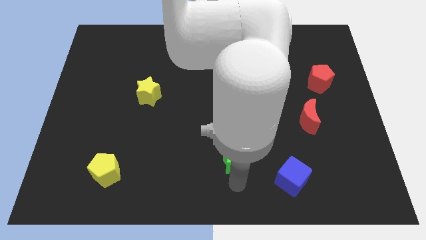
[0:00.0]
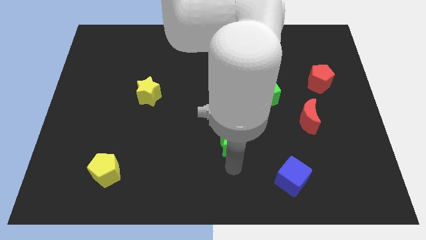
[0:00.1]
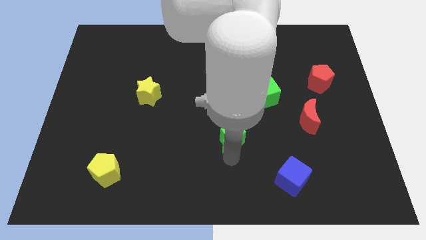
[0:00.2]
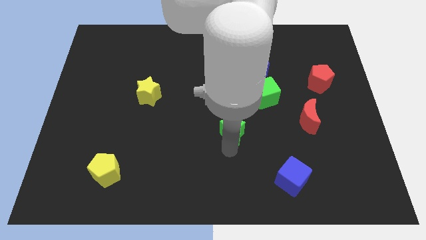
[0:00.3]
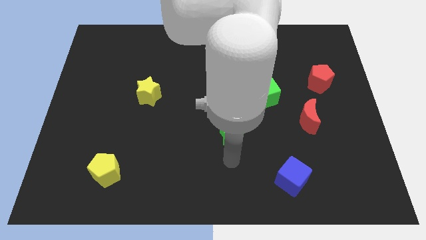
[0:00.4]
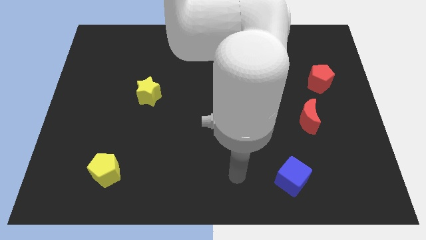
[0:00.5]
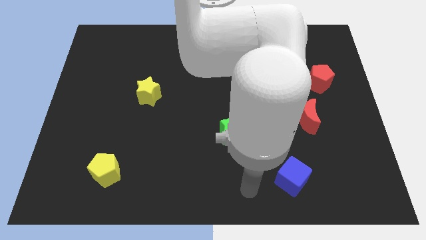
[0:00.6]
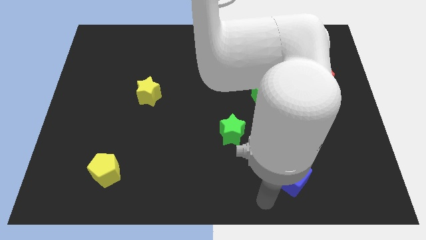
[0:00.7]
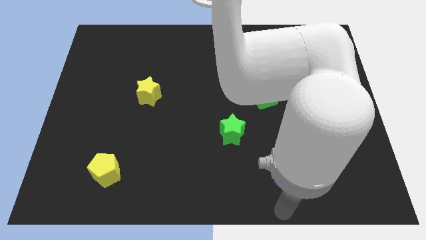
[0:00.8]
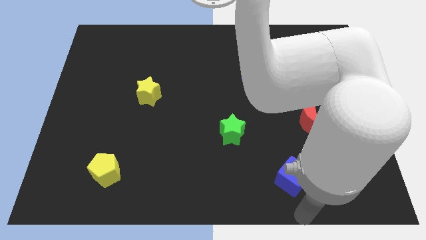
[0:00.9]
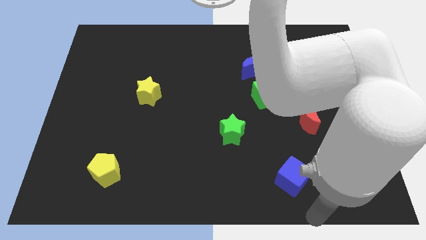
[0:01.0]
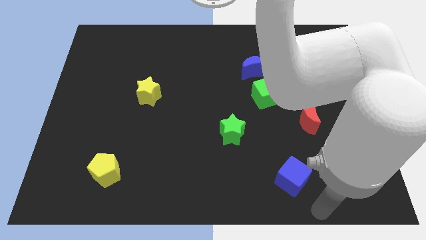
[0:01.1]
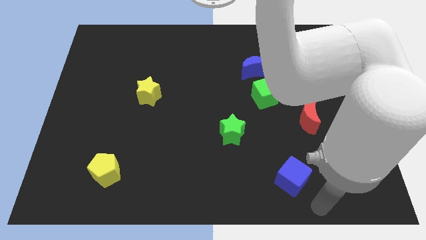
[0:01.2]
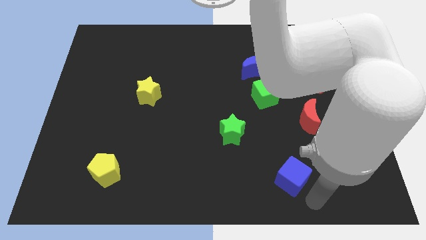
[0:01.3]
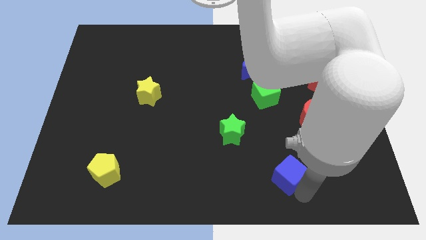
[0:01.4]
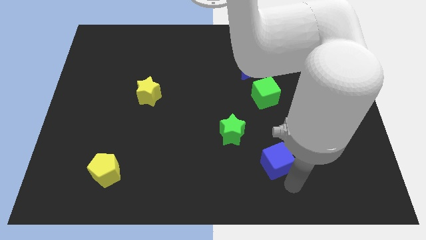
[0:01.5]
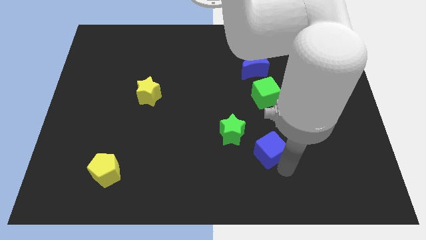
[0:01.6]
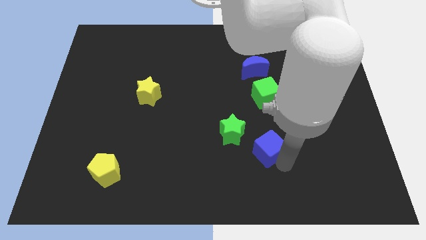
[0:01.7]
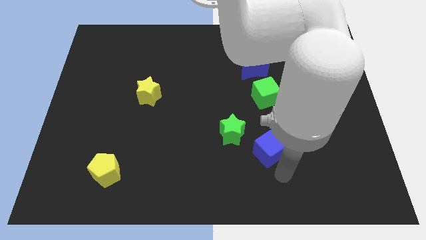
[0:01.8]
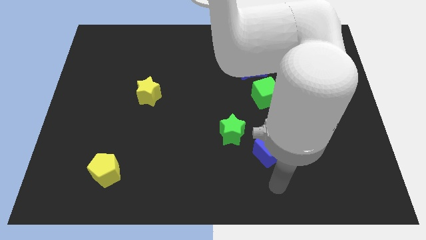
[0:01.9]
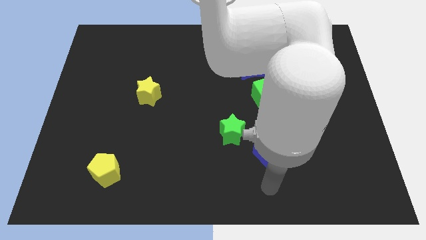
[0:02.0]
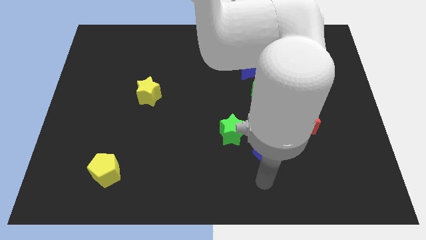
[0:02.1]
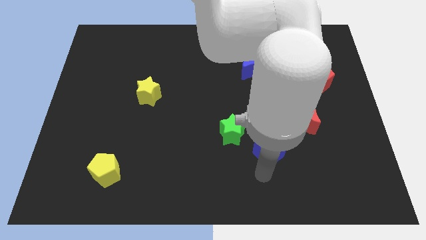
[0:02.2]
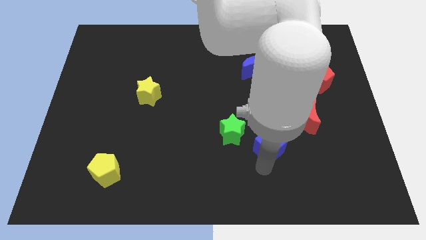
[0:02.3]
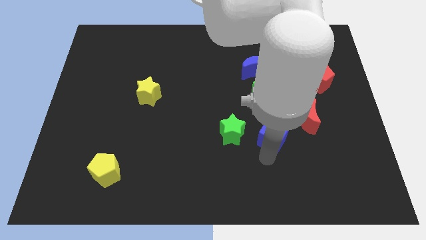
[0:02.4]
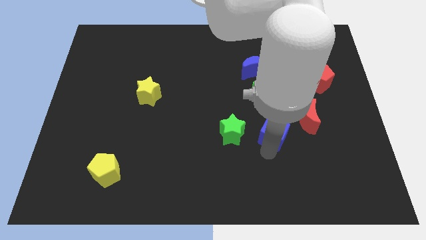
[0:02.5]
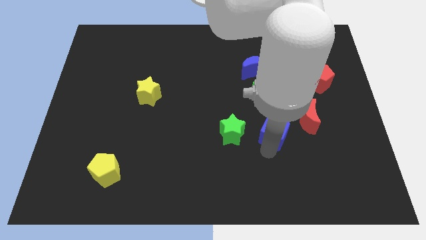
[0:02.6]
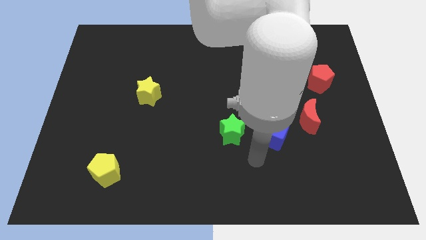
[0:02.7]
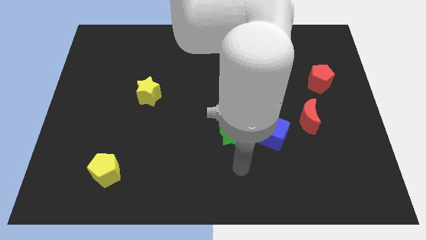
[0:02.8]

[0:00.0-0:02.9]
place blue cube beside green star

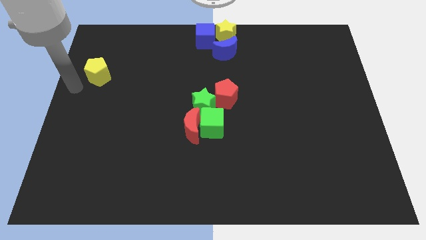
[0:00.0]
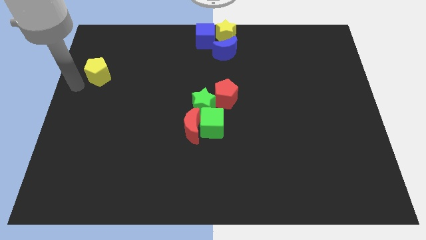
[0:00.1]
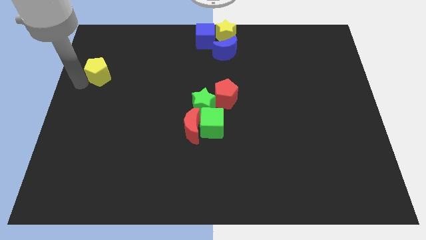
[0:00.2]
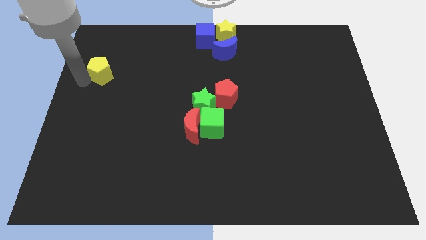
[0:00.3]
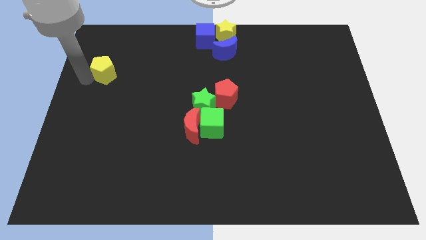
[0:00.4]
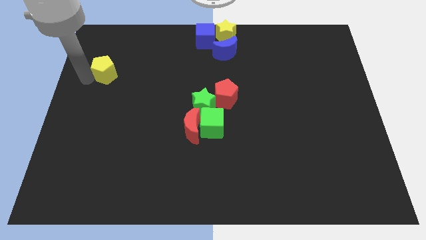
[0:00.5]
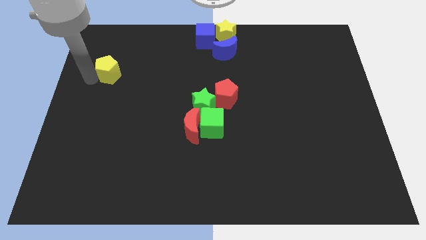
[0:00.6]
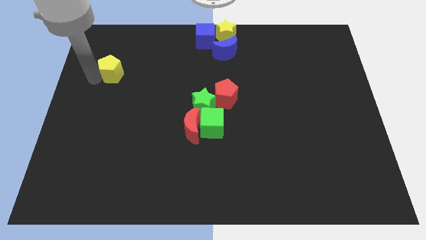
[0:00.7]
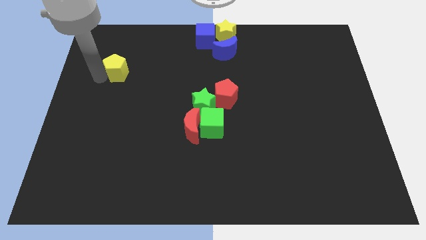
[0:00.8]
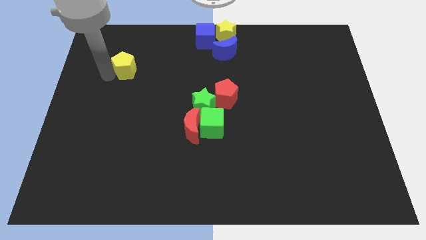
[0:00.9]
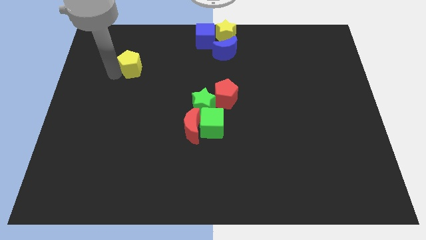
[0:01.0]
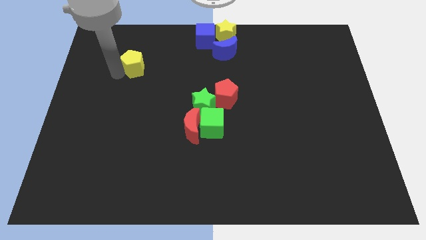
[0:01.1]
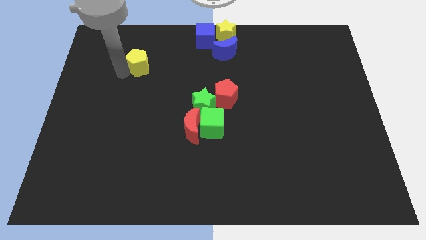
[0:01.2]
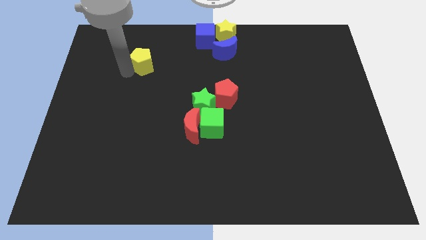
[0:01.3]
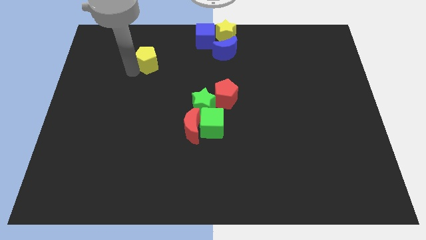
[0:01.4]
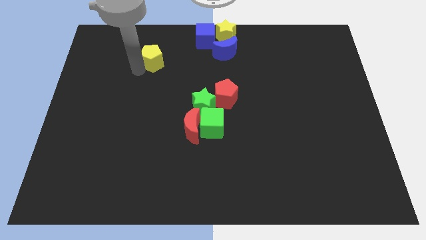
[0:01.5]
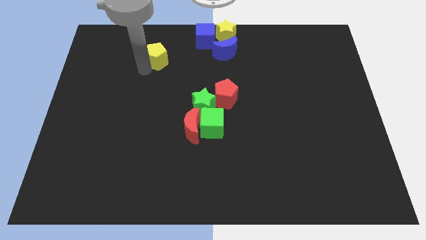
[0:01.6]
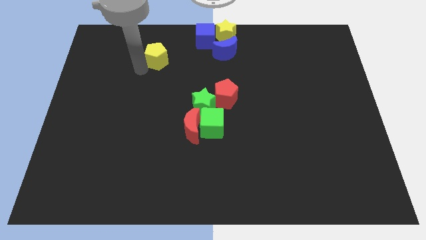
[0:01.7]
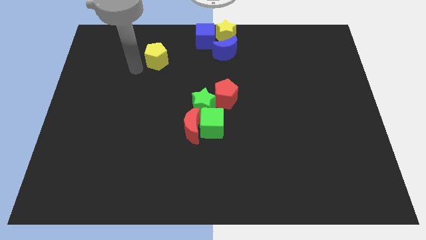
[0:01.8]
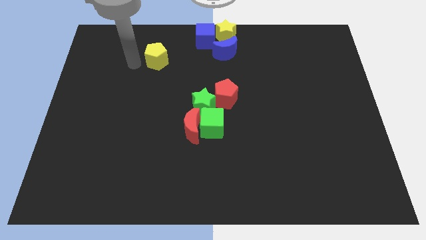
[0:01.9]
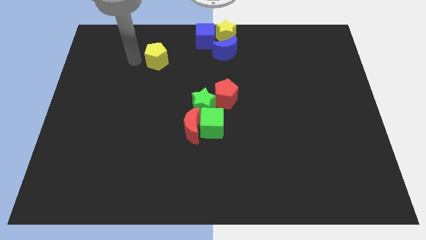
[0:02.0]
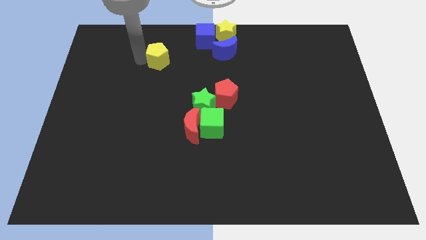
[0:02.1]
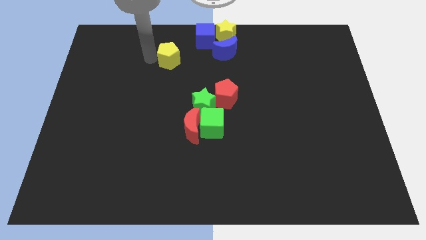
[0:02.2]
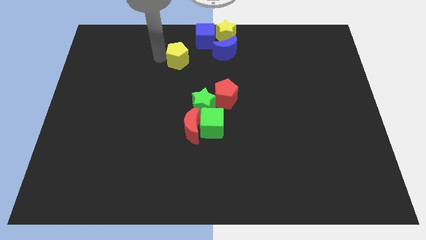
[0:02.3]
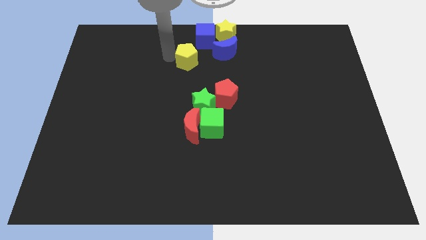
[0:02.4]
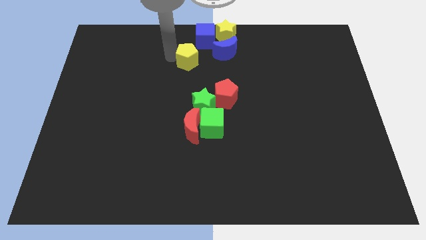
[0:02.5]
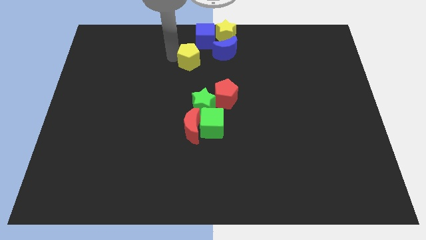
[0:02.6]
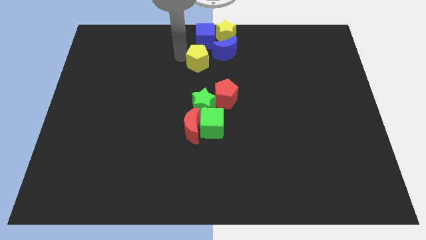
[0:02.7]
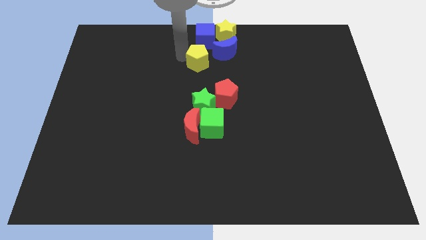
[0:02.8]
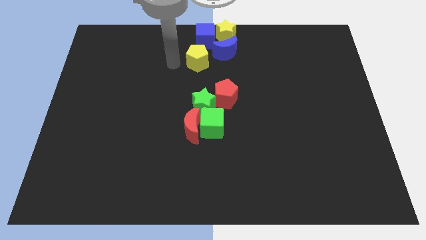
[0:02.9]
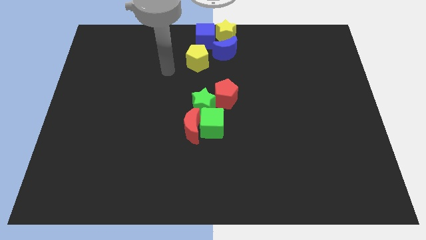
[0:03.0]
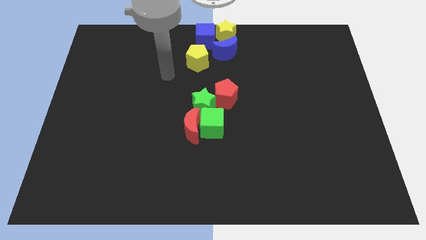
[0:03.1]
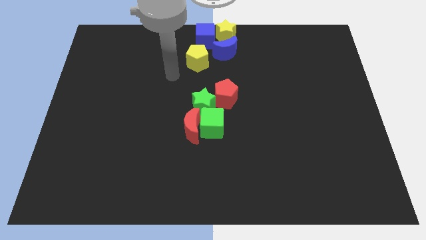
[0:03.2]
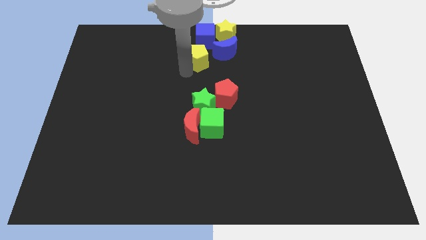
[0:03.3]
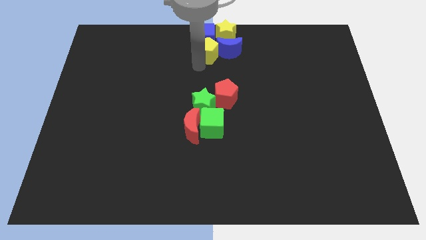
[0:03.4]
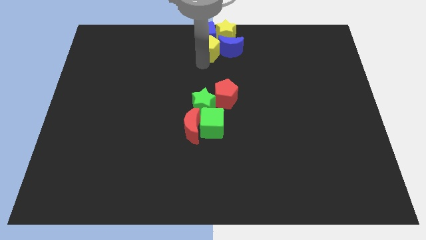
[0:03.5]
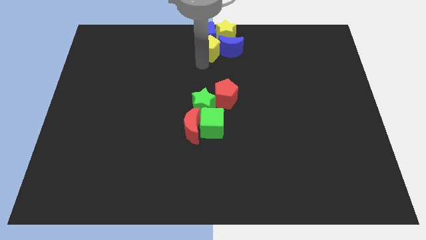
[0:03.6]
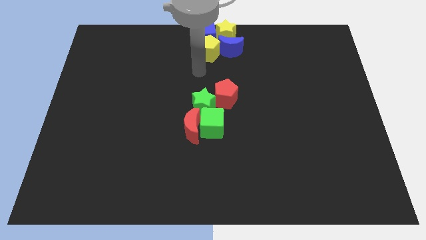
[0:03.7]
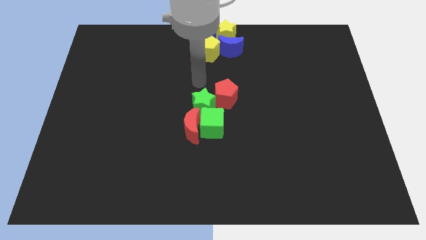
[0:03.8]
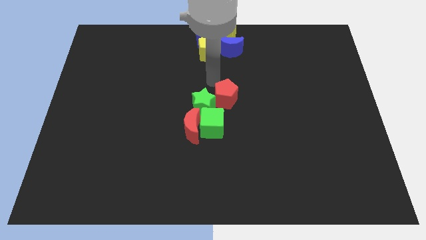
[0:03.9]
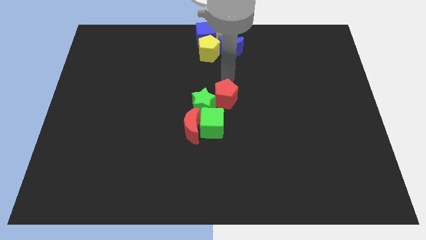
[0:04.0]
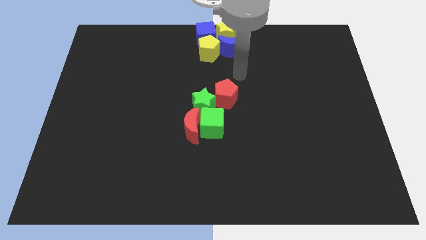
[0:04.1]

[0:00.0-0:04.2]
move the yellow pentagon to the bottom of the blue cube

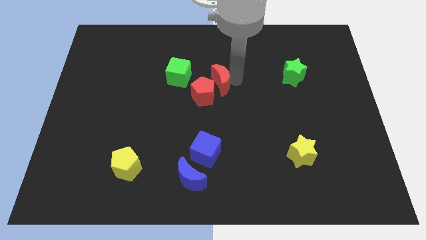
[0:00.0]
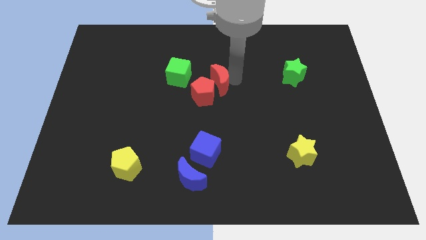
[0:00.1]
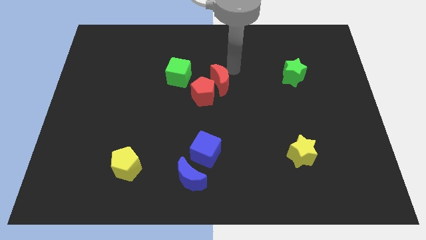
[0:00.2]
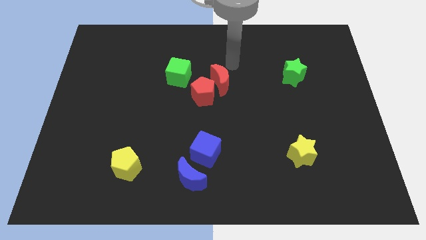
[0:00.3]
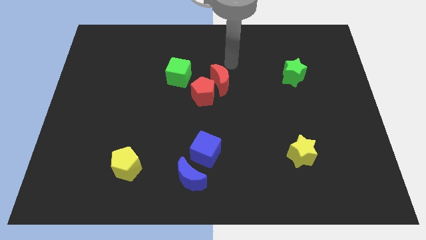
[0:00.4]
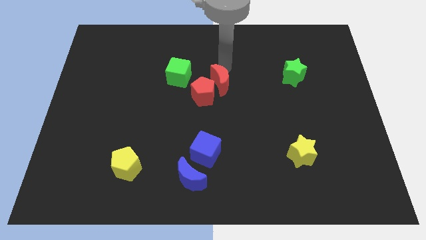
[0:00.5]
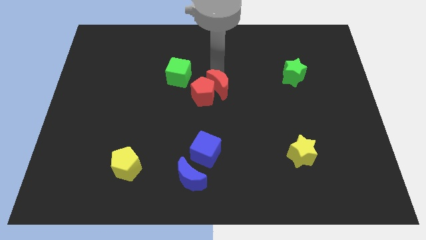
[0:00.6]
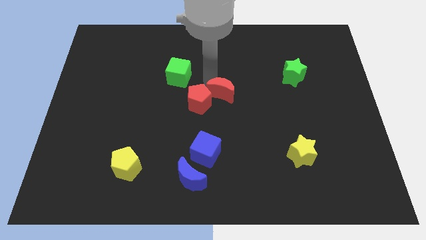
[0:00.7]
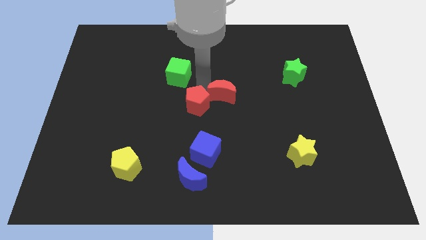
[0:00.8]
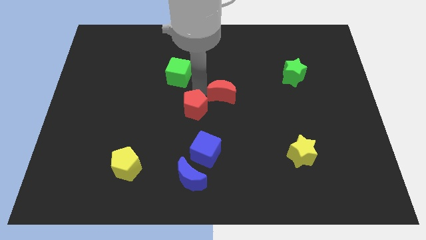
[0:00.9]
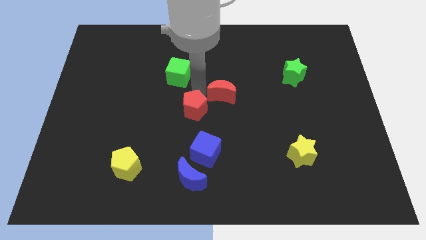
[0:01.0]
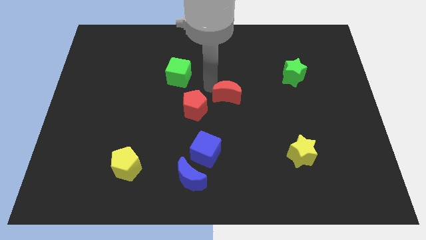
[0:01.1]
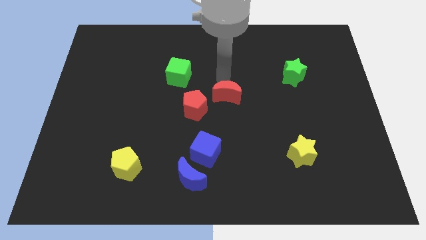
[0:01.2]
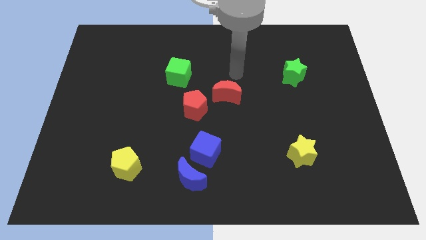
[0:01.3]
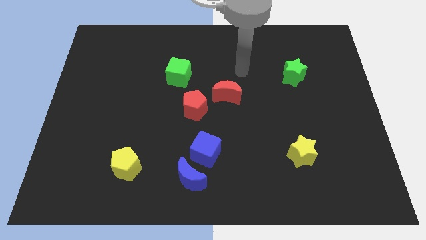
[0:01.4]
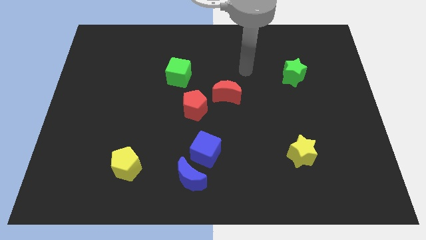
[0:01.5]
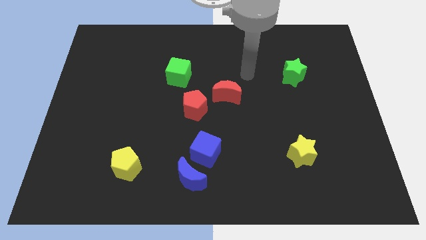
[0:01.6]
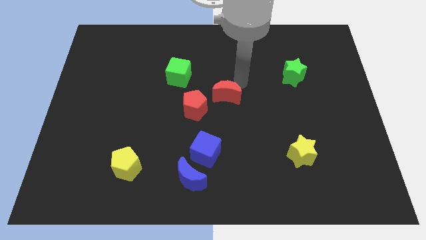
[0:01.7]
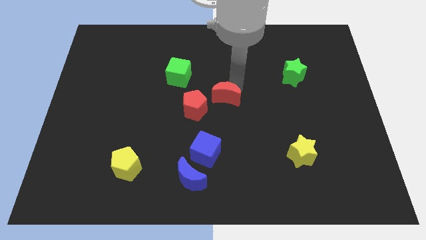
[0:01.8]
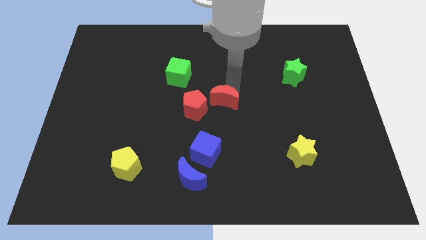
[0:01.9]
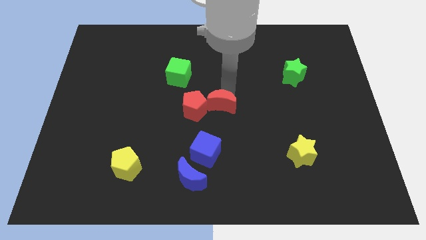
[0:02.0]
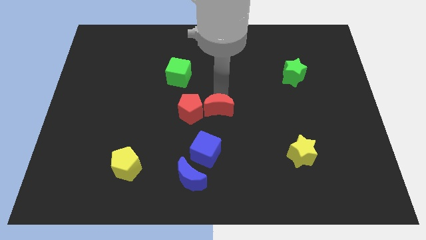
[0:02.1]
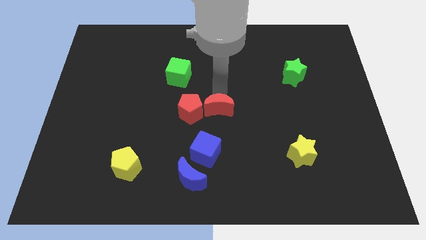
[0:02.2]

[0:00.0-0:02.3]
separate the red moon and red pentagon above the blue blocks

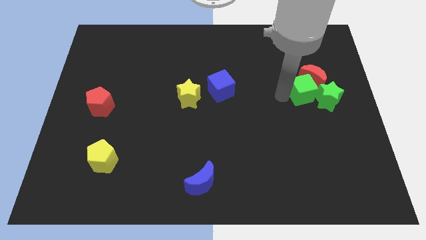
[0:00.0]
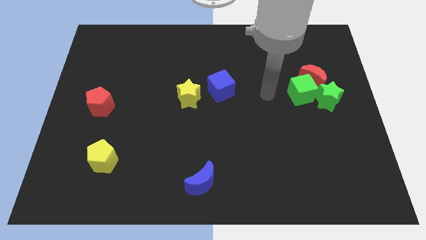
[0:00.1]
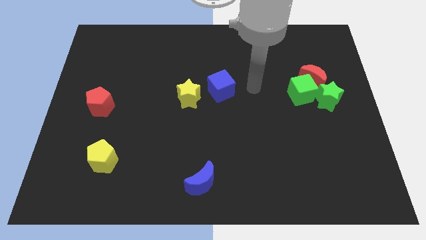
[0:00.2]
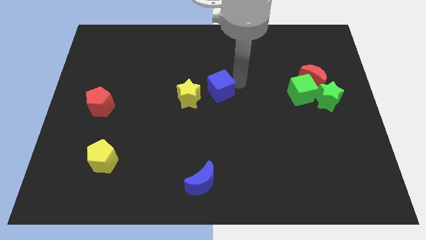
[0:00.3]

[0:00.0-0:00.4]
point your arm to the right side of blue cube
